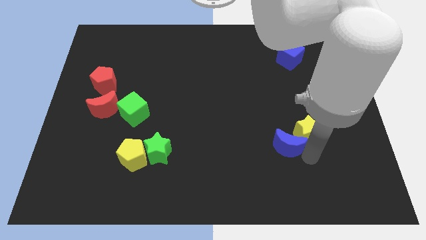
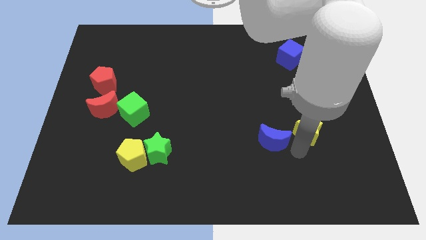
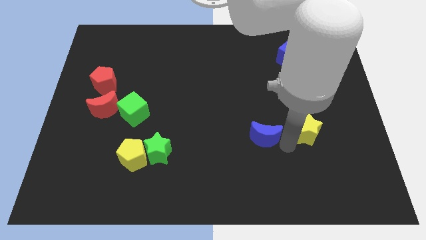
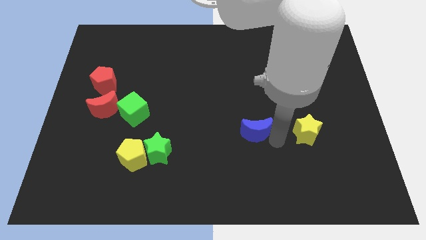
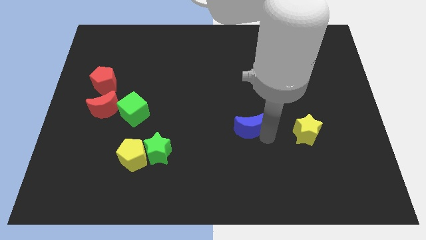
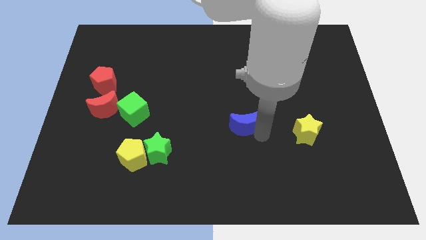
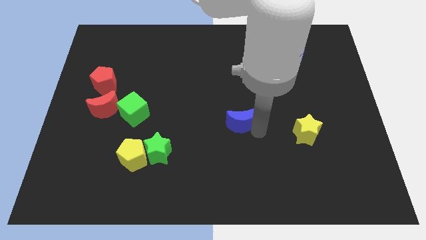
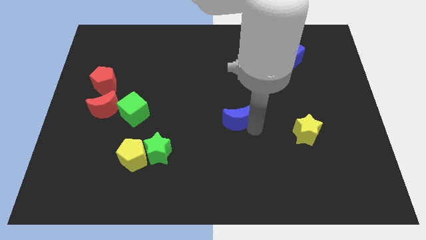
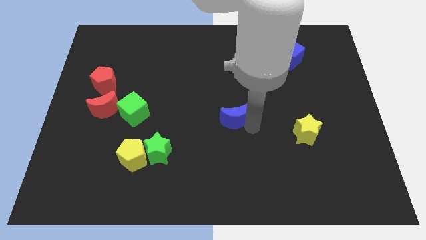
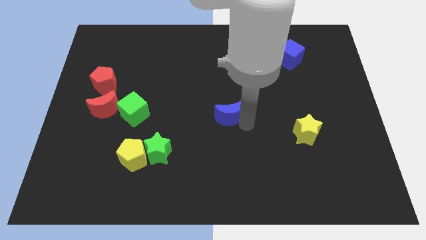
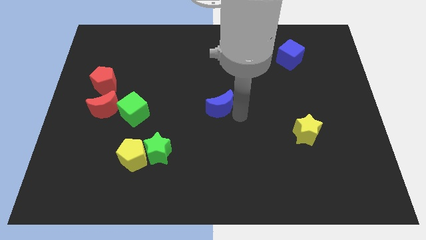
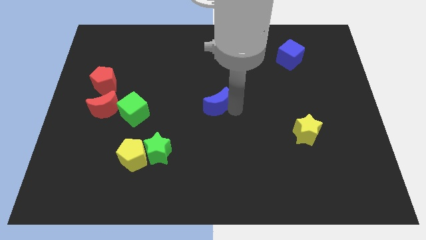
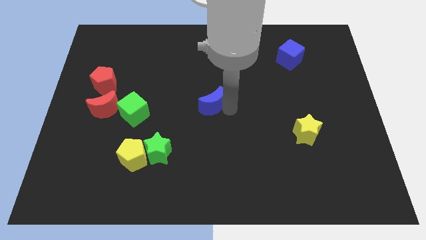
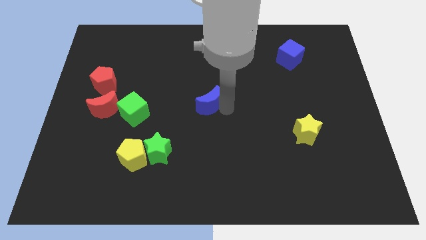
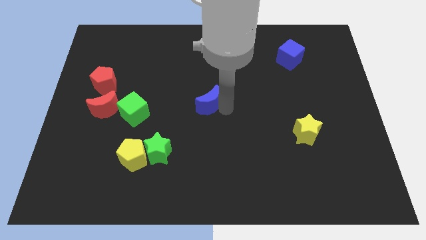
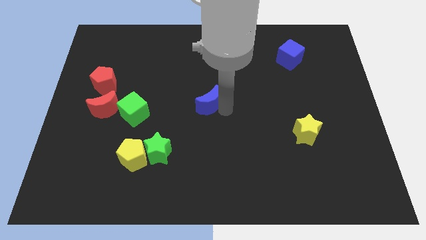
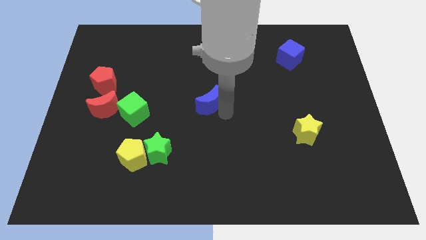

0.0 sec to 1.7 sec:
put the blue moon horizontally right to the green cube

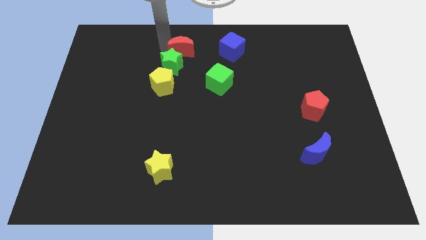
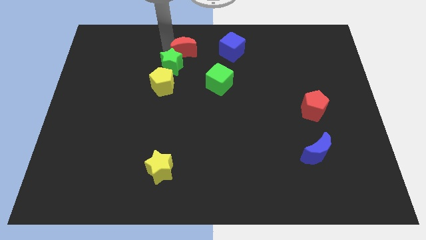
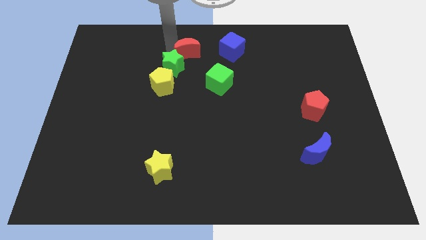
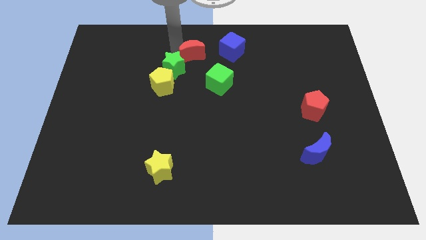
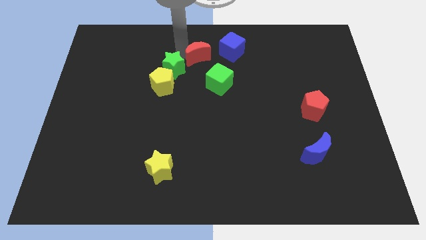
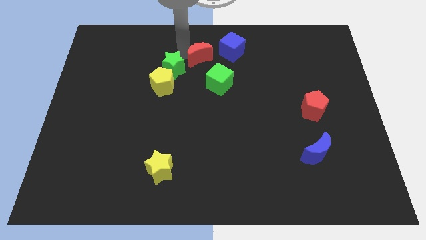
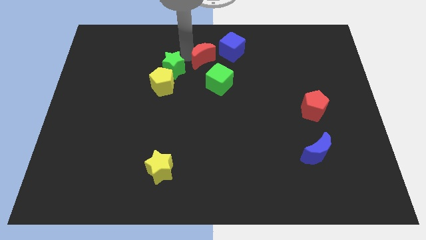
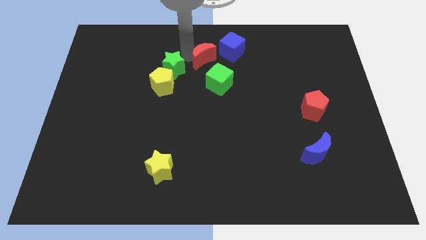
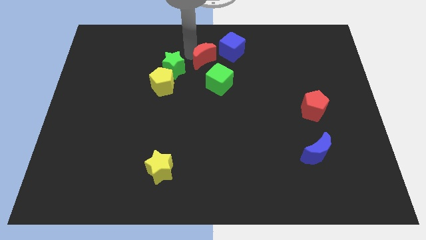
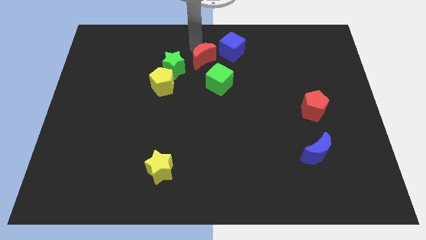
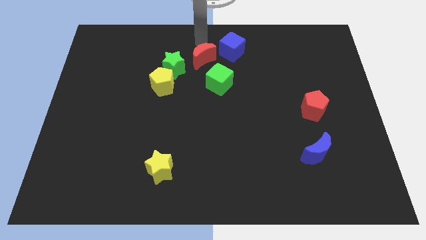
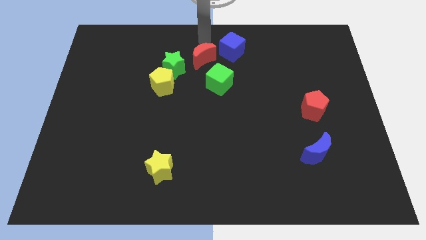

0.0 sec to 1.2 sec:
place the red crescent diagonally in between the blue cube and green star

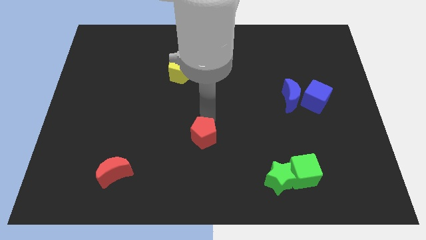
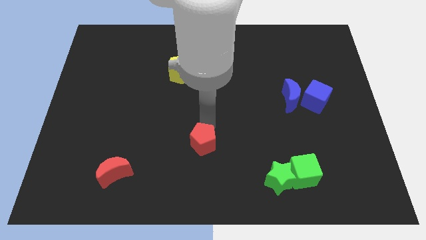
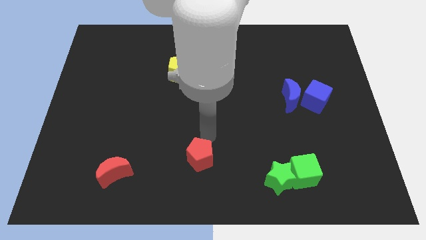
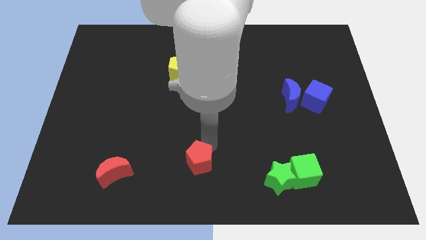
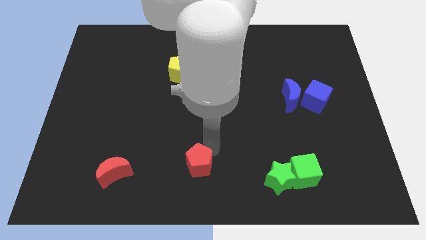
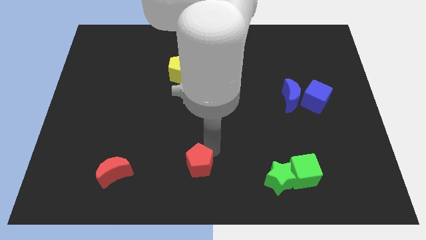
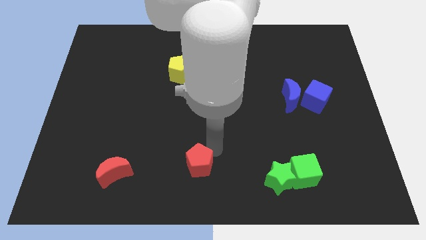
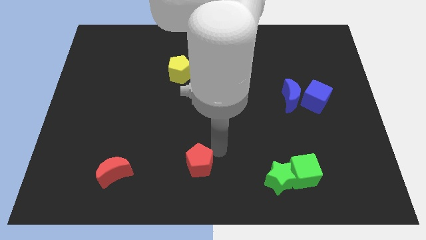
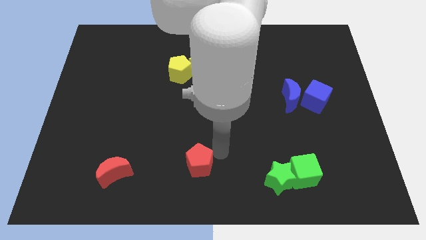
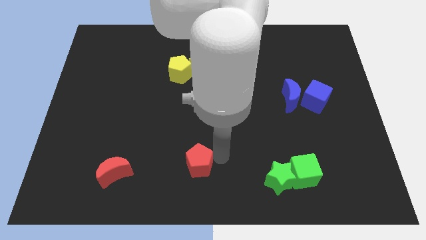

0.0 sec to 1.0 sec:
push the yellow pentagon to the bottom of the board

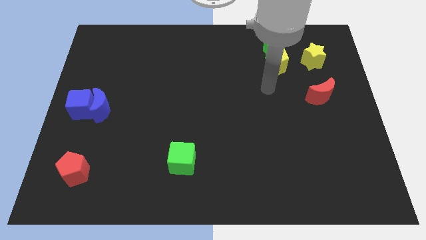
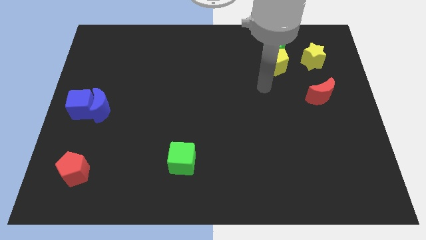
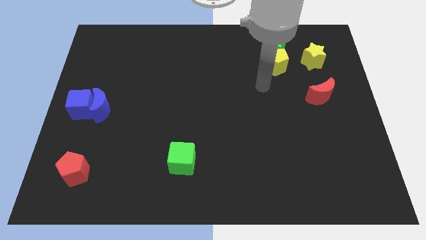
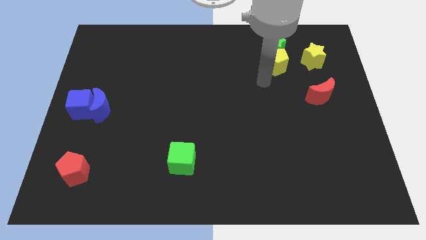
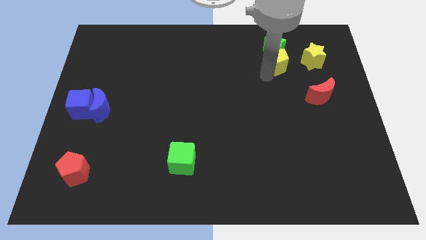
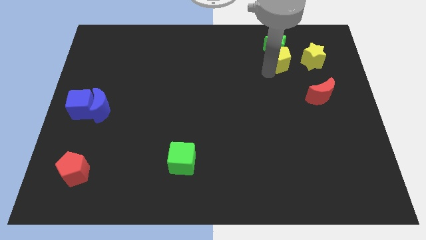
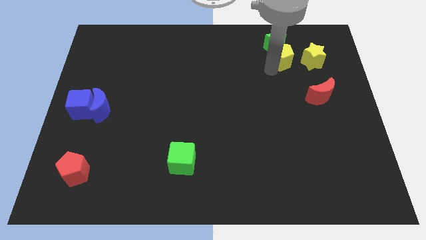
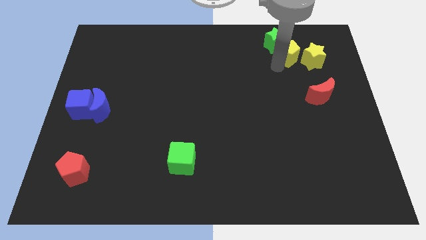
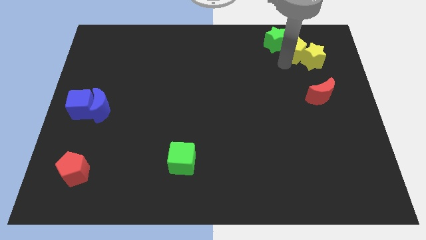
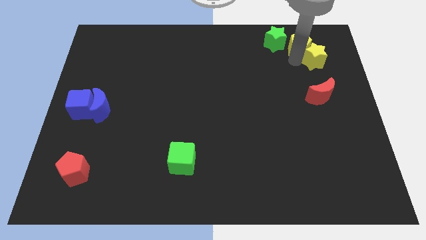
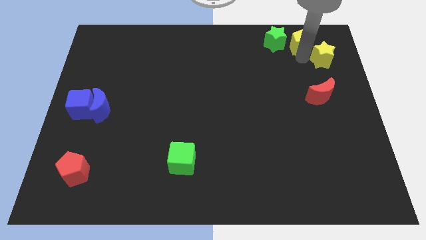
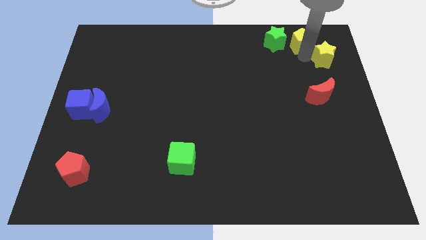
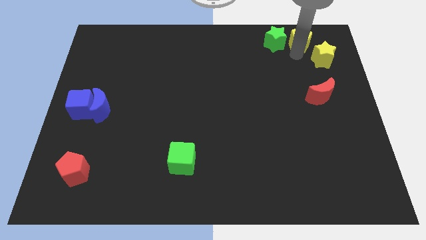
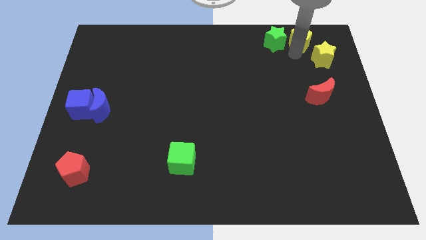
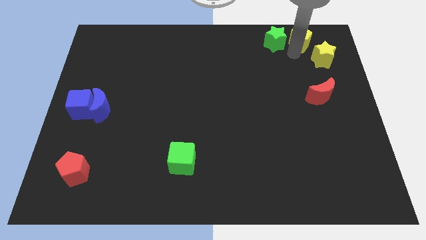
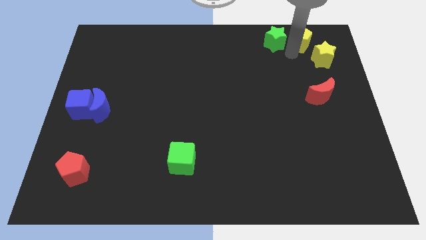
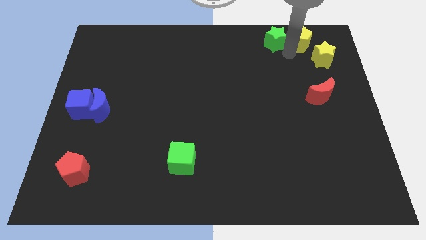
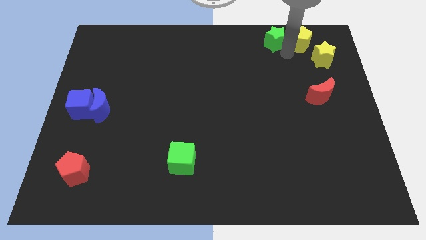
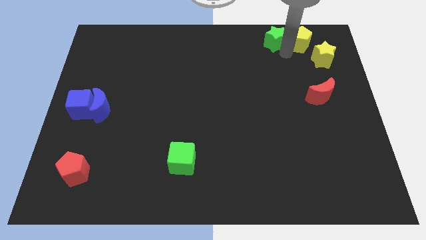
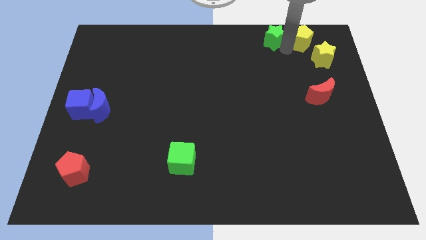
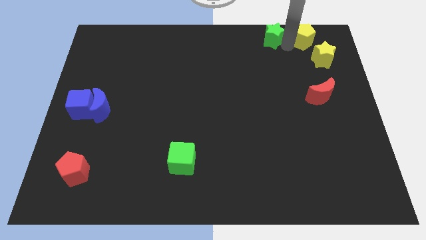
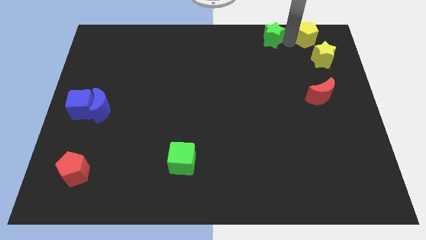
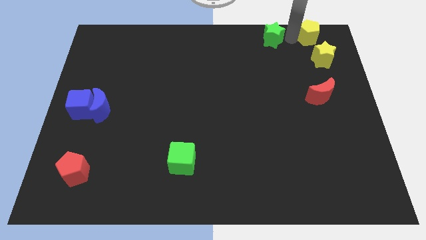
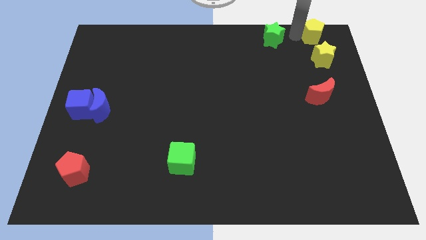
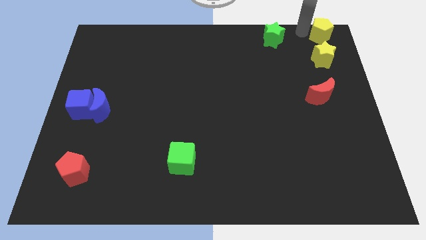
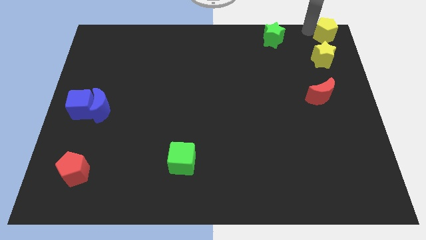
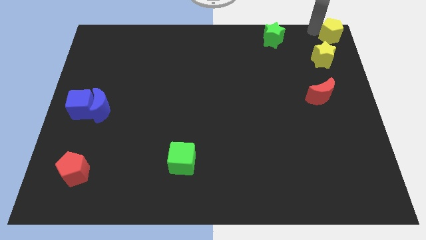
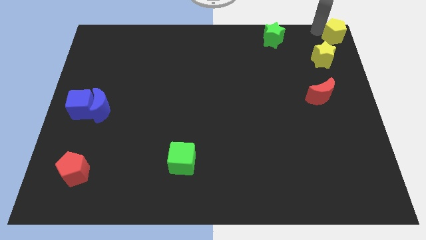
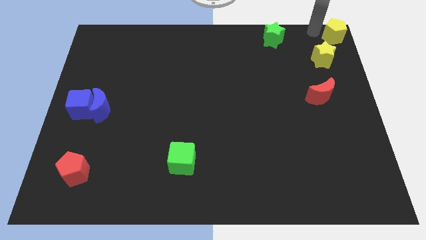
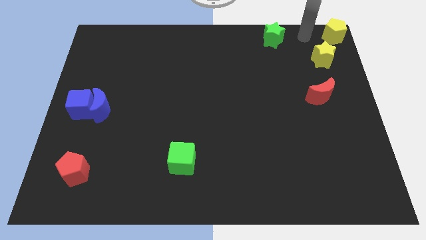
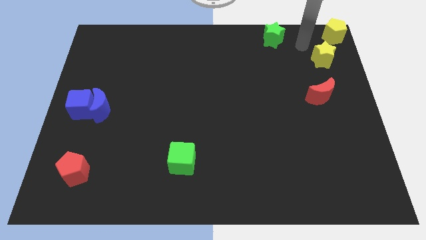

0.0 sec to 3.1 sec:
push the yellow pentagon to the top right corner of the board

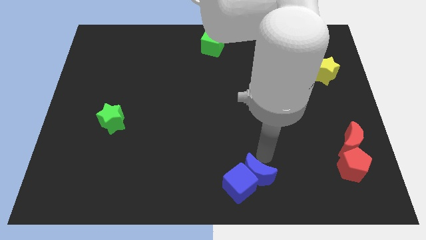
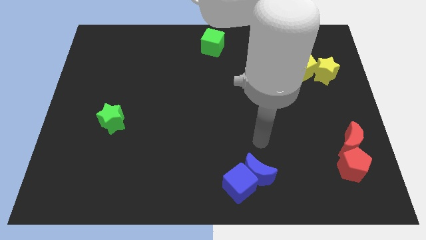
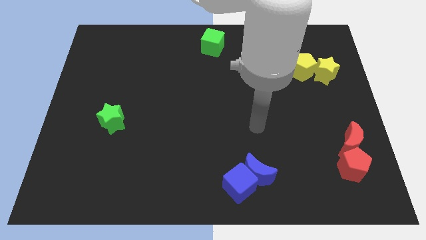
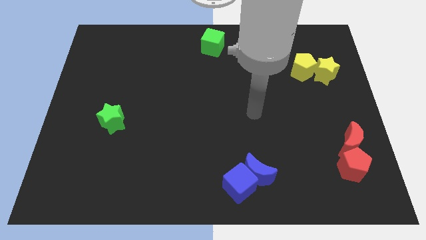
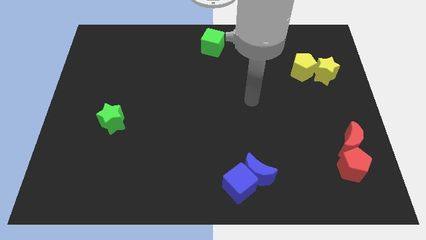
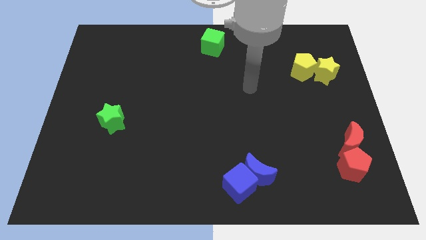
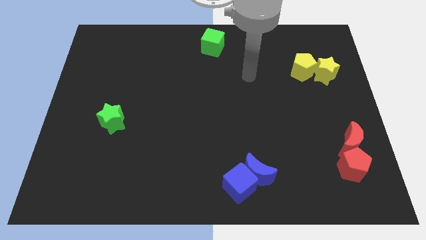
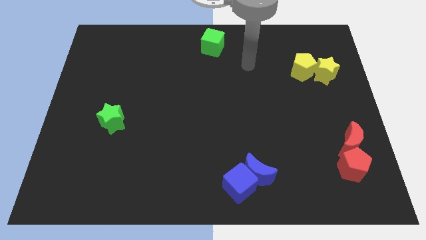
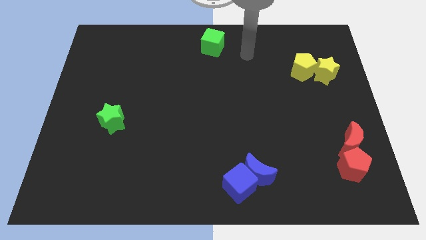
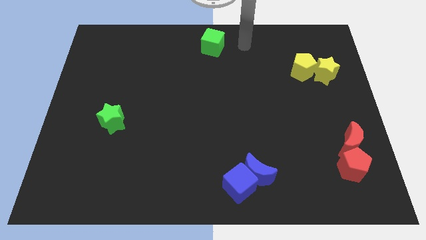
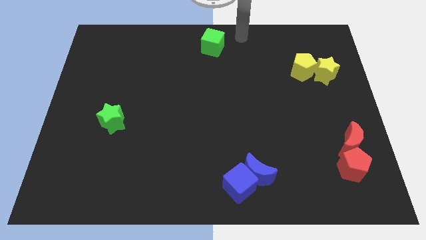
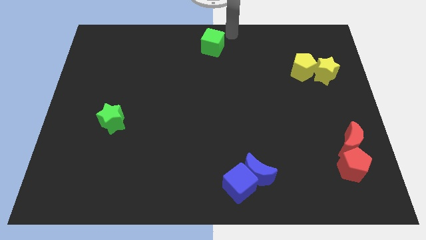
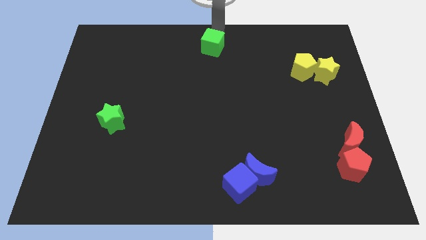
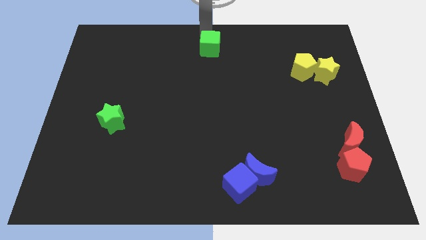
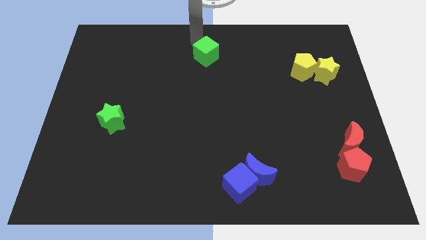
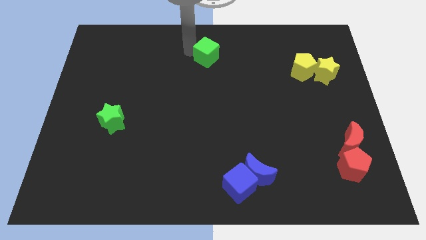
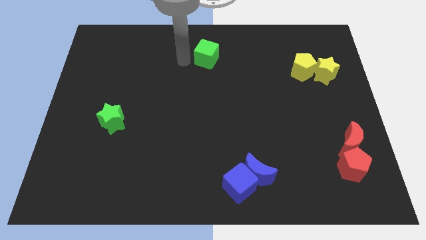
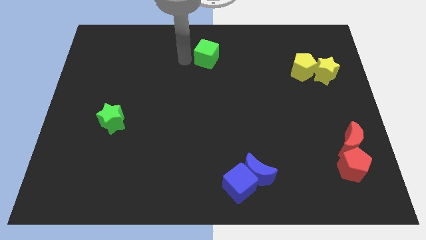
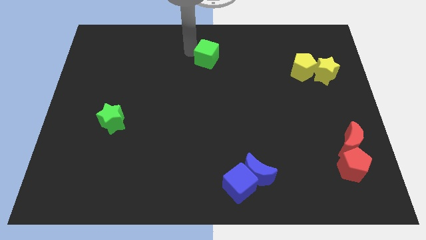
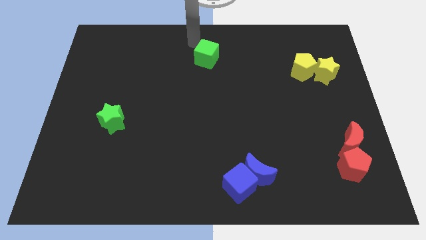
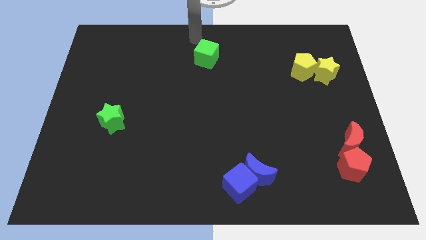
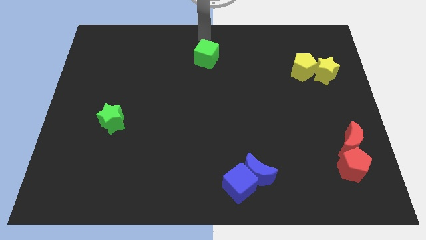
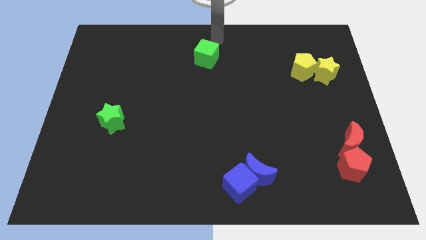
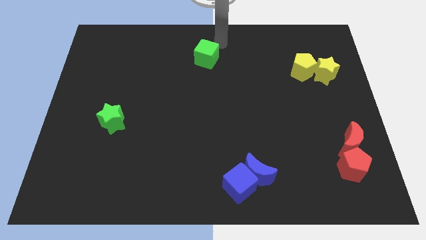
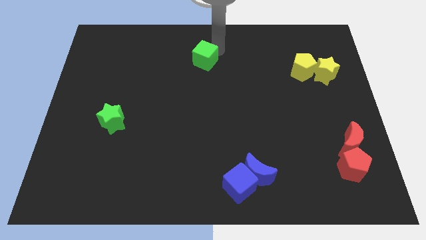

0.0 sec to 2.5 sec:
move the arm towards the top center of the board
